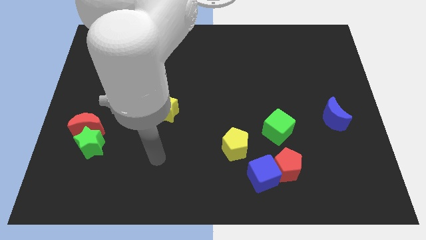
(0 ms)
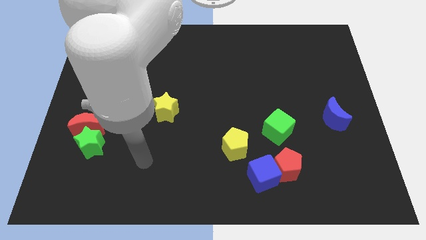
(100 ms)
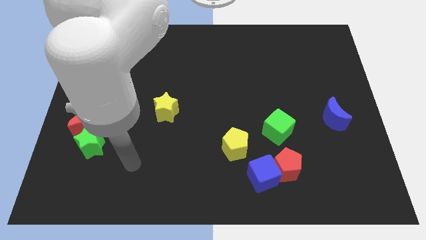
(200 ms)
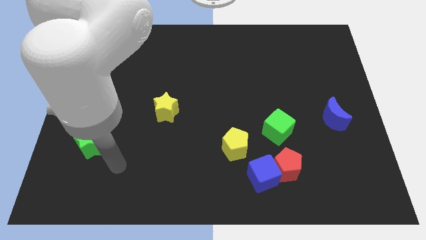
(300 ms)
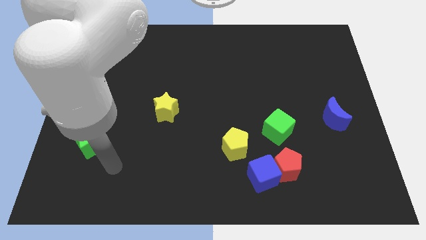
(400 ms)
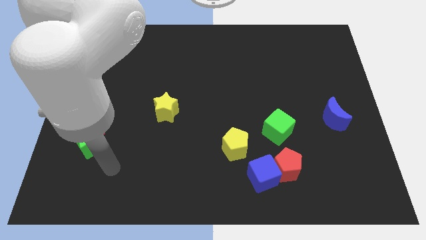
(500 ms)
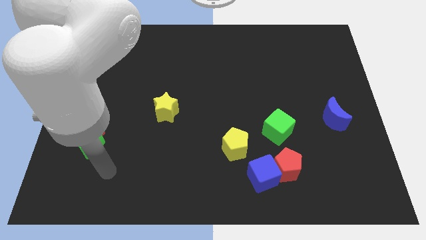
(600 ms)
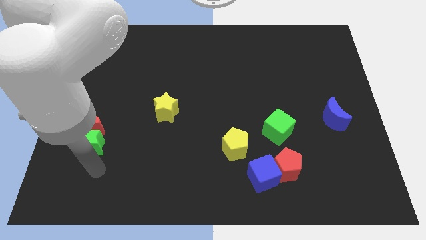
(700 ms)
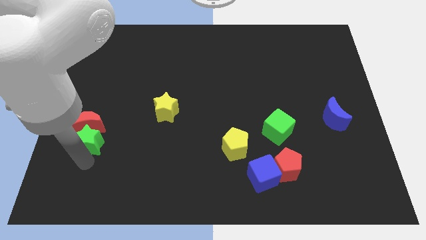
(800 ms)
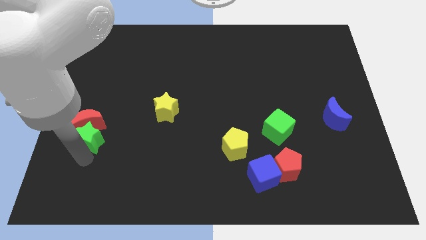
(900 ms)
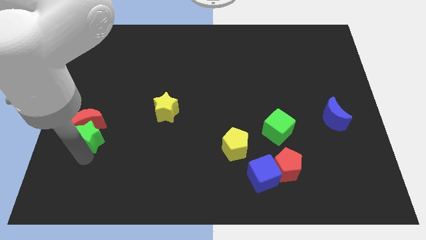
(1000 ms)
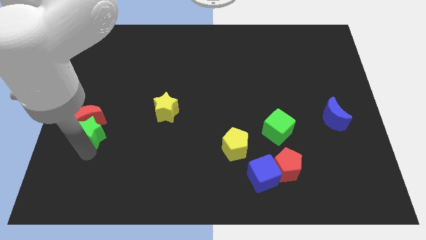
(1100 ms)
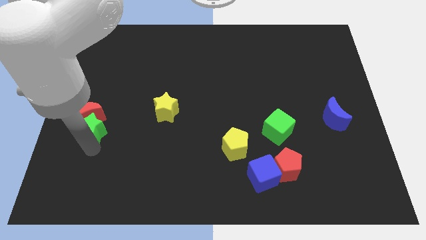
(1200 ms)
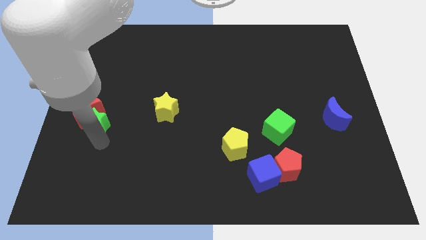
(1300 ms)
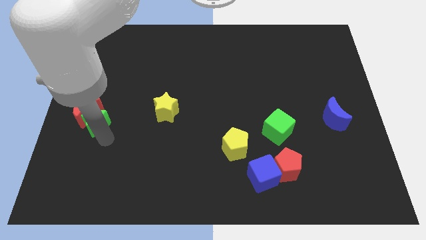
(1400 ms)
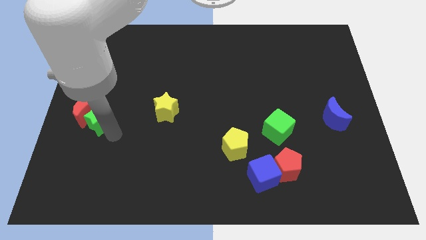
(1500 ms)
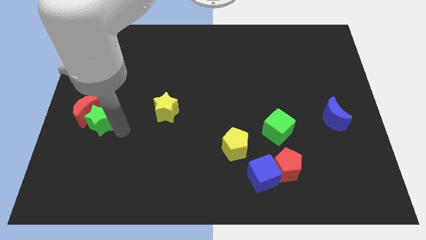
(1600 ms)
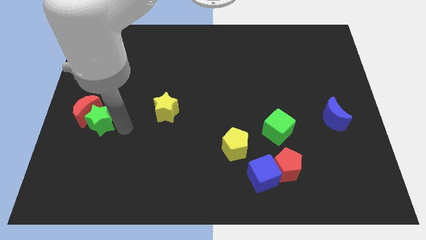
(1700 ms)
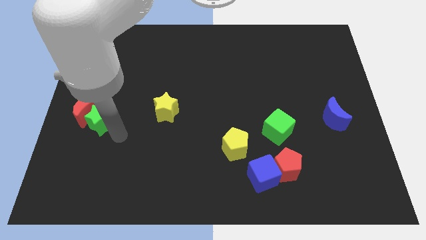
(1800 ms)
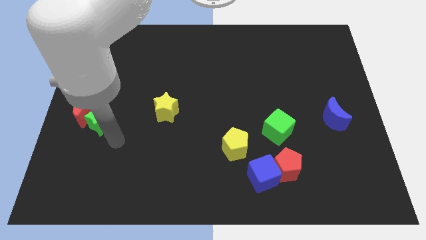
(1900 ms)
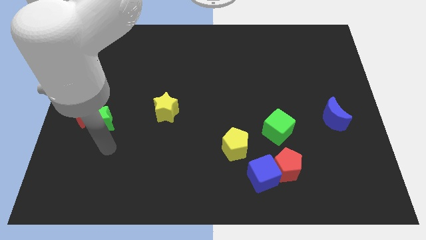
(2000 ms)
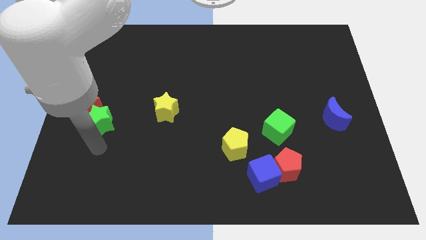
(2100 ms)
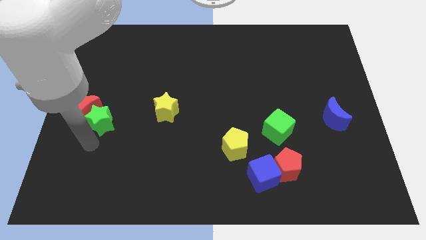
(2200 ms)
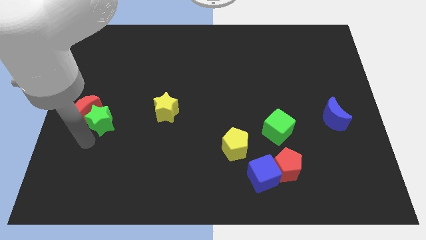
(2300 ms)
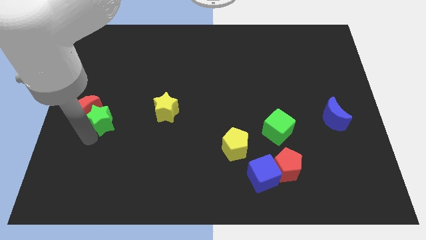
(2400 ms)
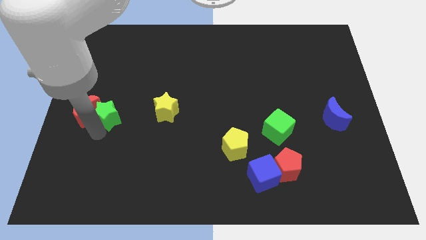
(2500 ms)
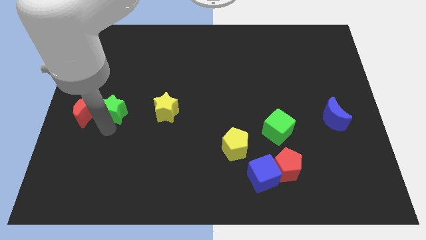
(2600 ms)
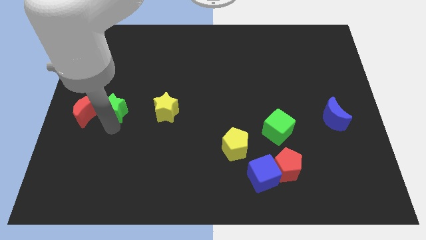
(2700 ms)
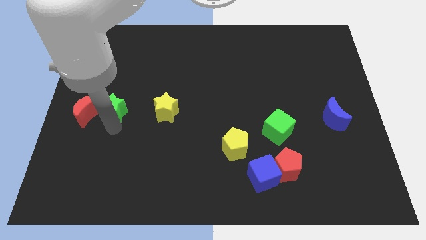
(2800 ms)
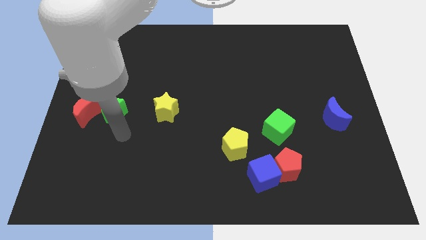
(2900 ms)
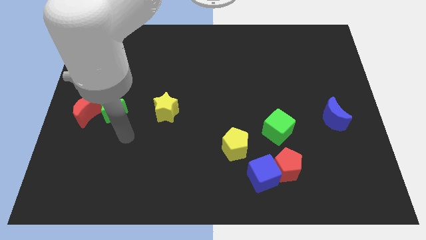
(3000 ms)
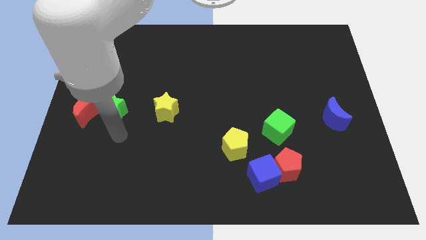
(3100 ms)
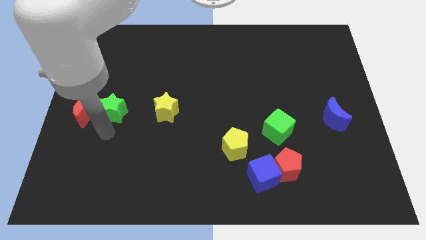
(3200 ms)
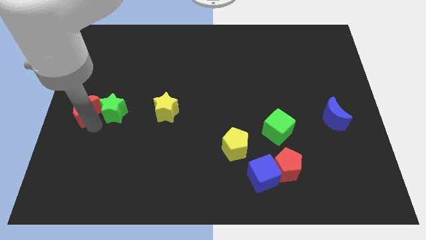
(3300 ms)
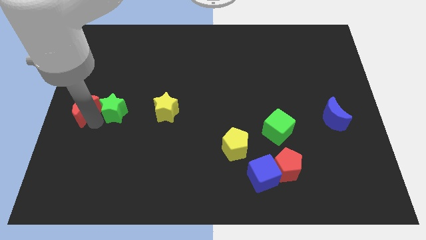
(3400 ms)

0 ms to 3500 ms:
push the red cresent along with the green star to the left center of board

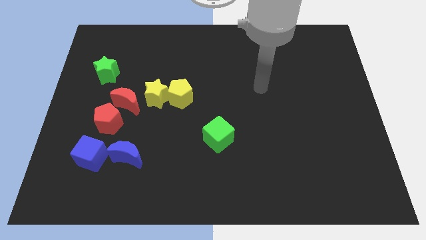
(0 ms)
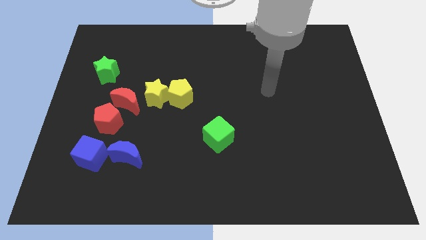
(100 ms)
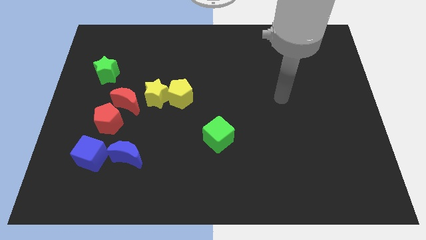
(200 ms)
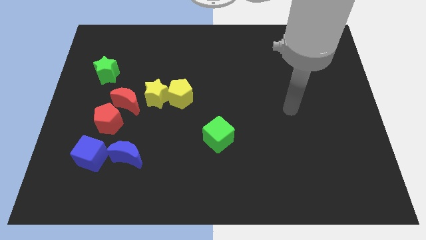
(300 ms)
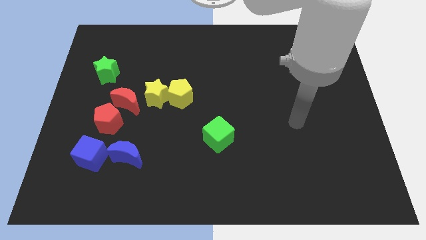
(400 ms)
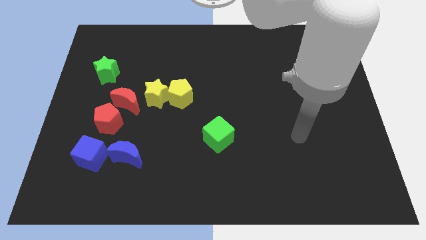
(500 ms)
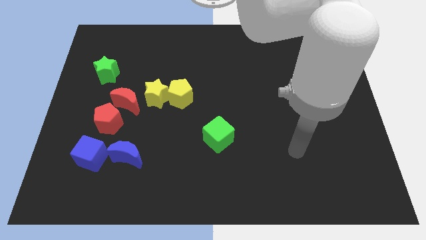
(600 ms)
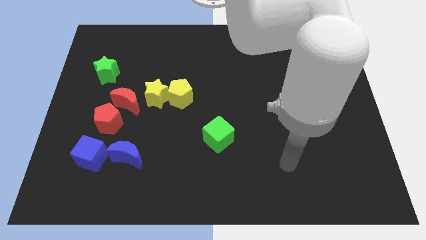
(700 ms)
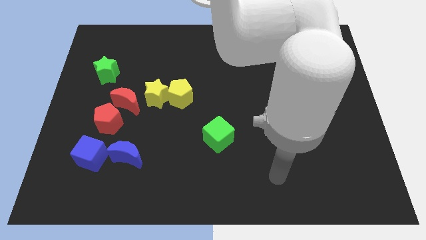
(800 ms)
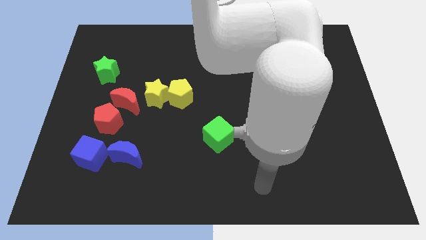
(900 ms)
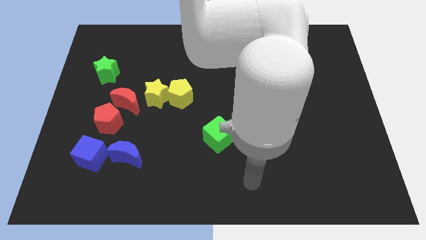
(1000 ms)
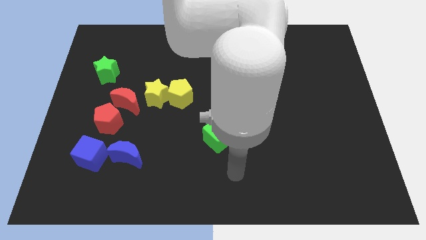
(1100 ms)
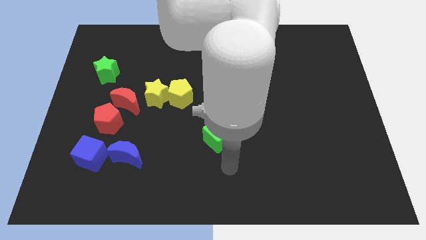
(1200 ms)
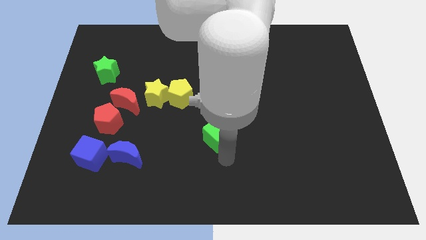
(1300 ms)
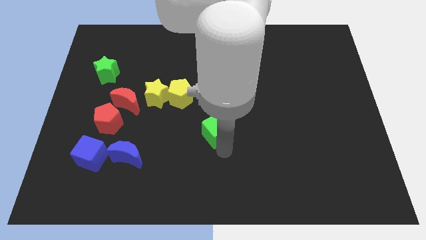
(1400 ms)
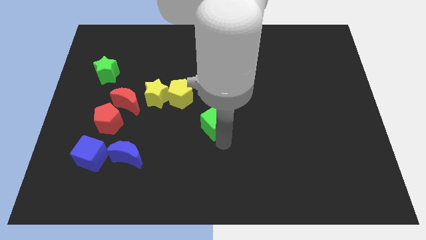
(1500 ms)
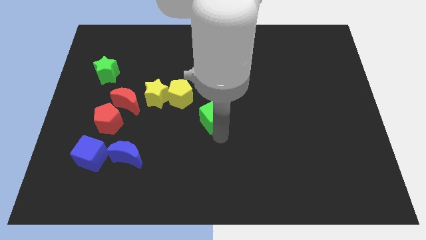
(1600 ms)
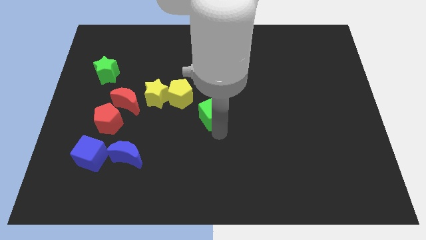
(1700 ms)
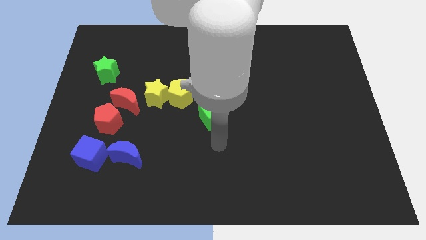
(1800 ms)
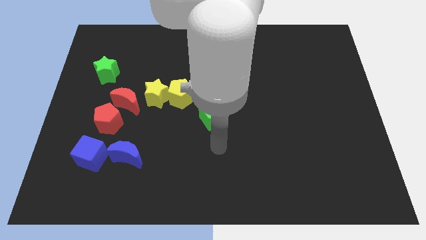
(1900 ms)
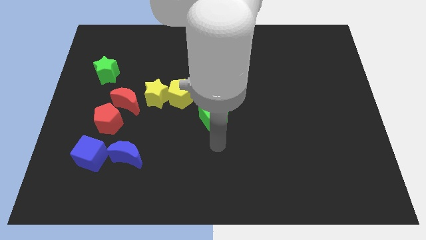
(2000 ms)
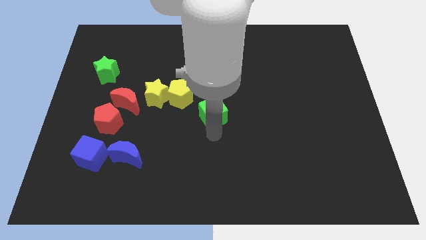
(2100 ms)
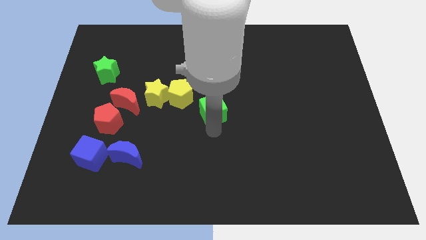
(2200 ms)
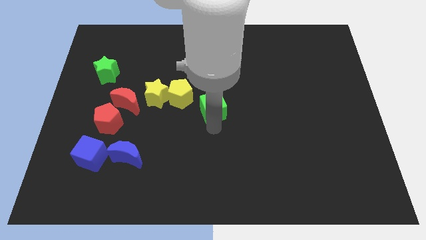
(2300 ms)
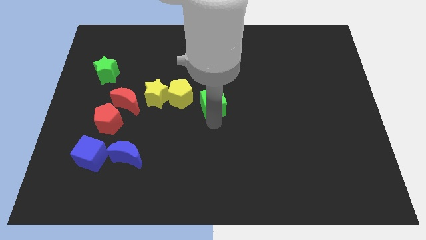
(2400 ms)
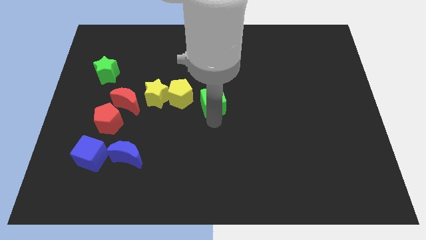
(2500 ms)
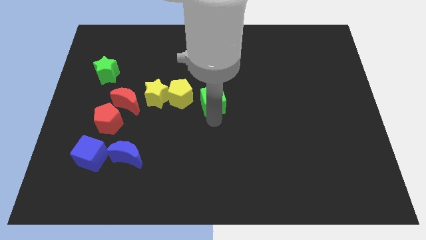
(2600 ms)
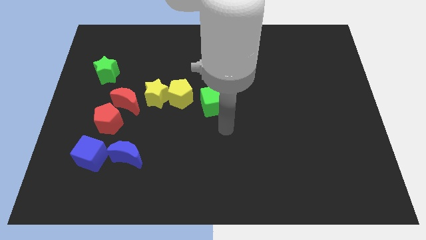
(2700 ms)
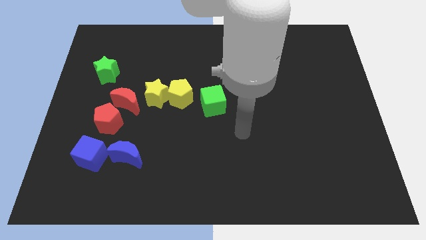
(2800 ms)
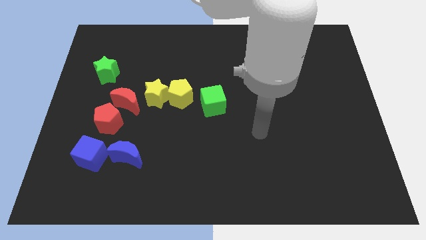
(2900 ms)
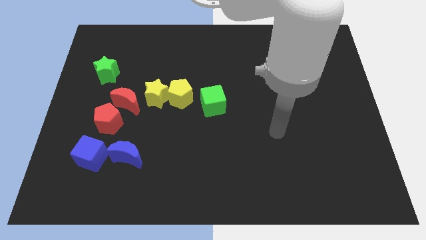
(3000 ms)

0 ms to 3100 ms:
move the green cube to the right of the yellow pentagon

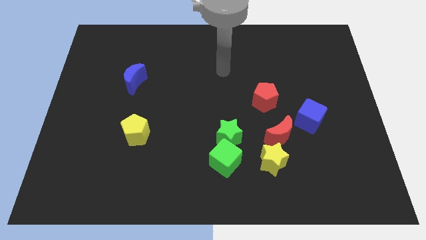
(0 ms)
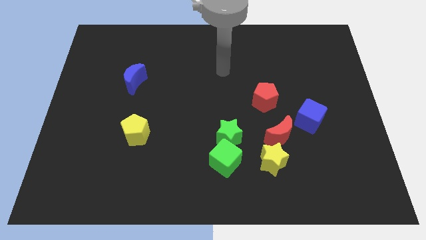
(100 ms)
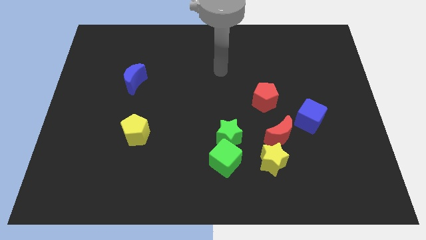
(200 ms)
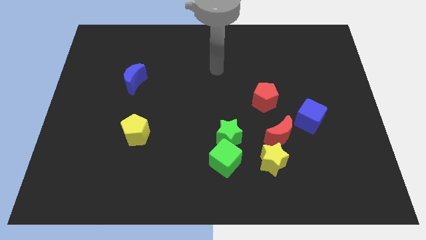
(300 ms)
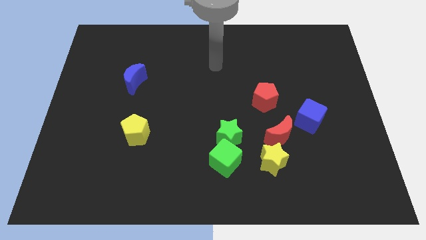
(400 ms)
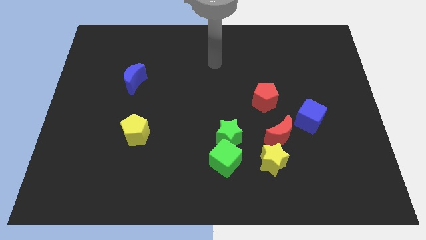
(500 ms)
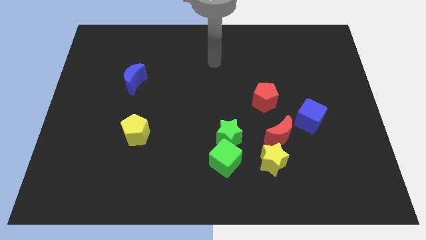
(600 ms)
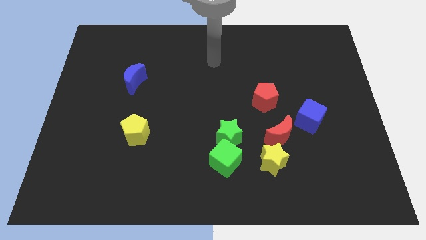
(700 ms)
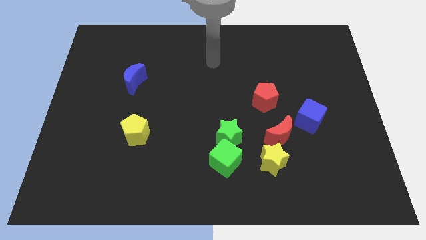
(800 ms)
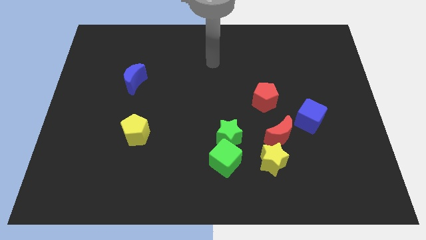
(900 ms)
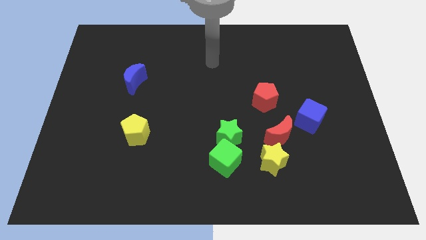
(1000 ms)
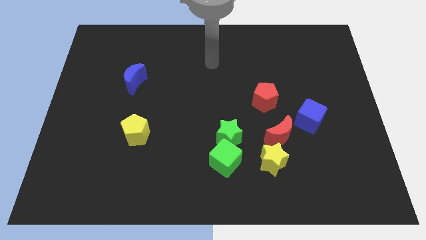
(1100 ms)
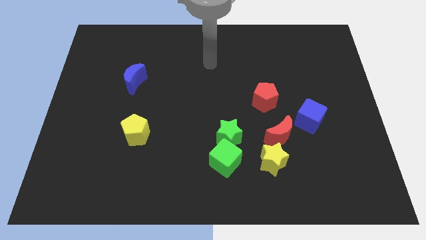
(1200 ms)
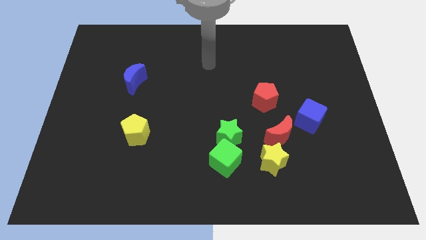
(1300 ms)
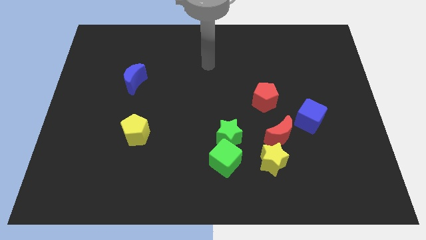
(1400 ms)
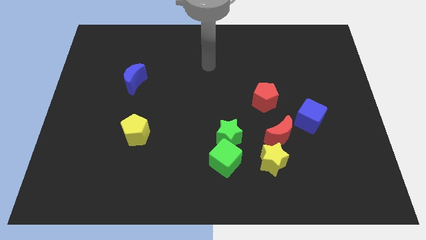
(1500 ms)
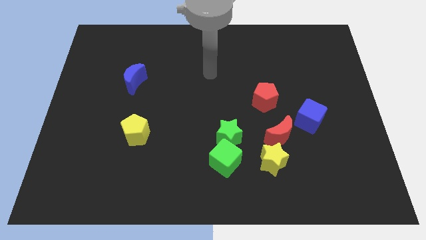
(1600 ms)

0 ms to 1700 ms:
move your arm slightly to the left

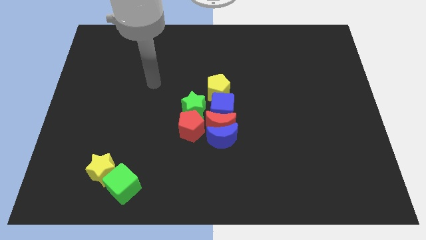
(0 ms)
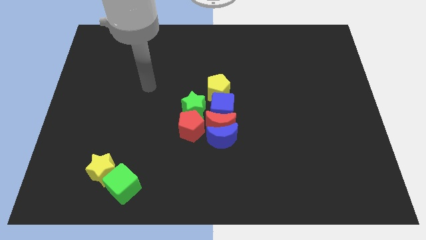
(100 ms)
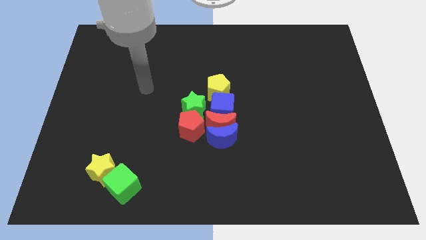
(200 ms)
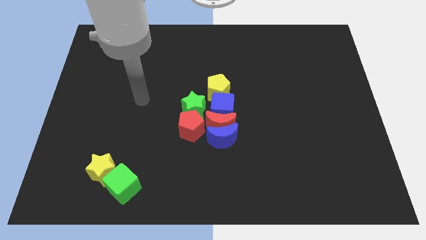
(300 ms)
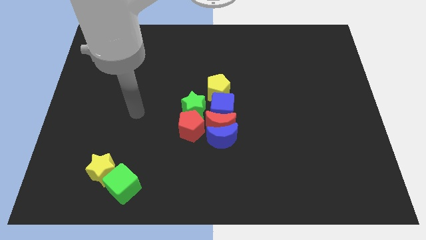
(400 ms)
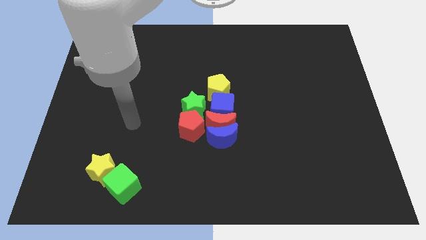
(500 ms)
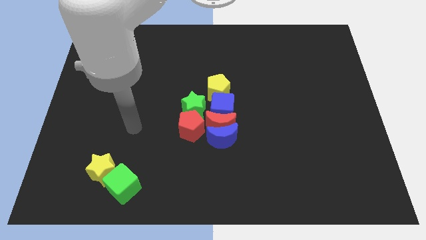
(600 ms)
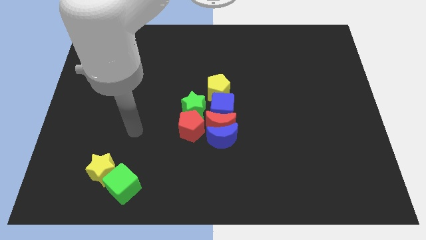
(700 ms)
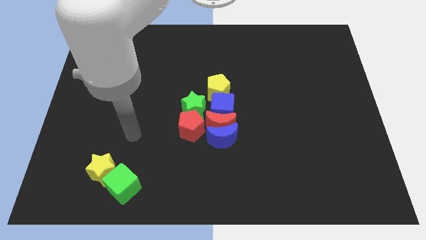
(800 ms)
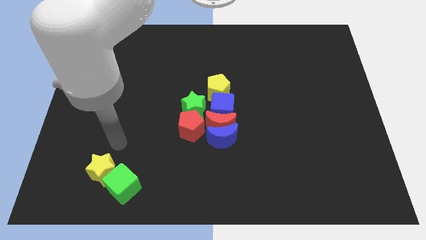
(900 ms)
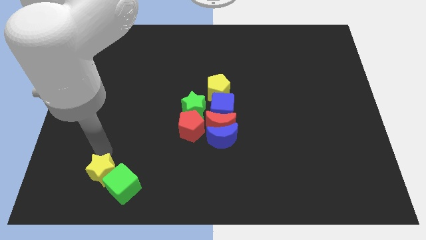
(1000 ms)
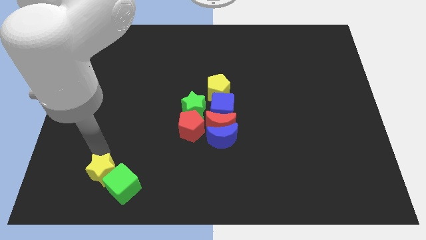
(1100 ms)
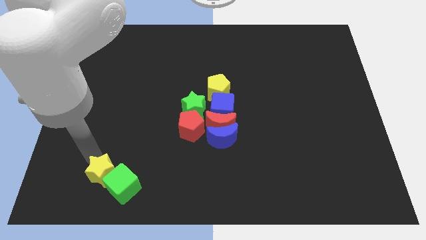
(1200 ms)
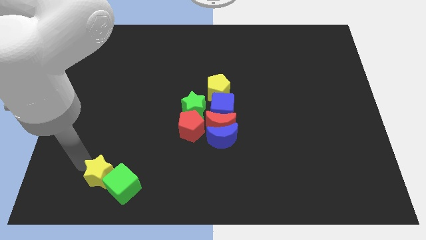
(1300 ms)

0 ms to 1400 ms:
slightly push the yellow star
